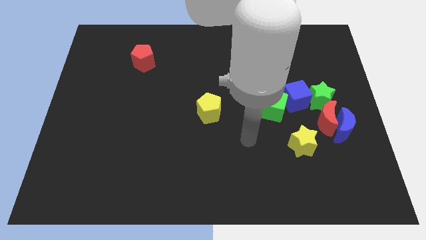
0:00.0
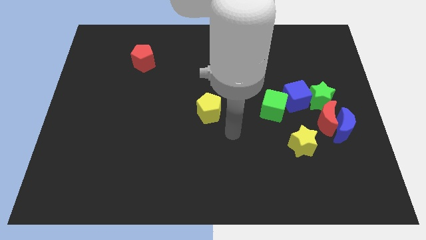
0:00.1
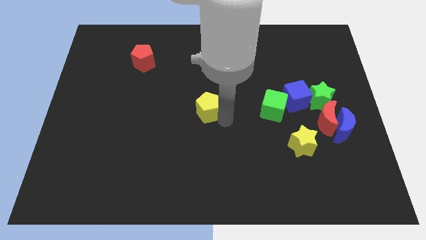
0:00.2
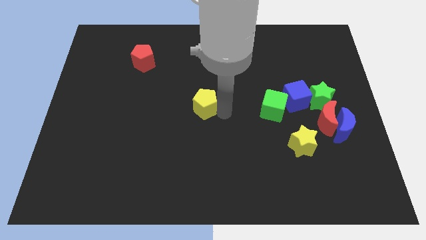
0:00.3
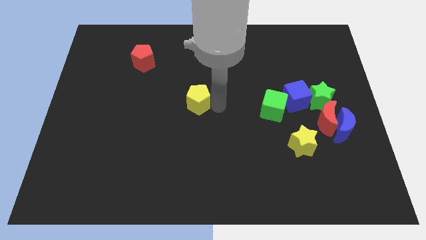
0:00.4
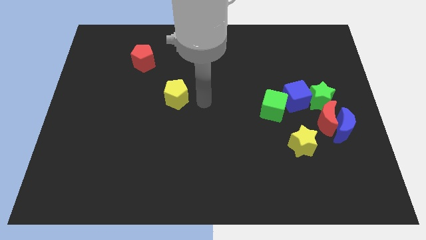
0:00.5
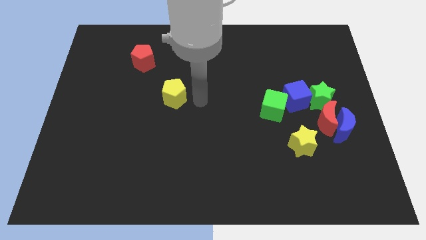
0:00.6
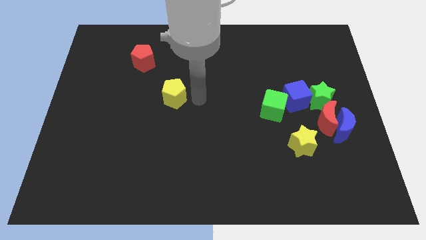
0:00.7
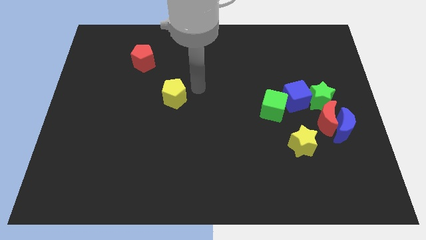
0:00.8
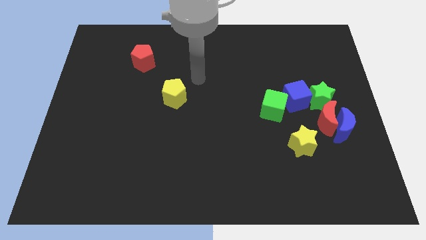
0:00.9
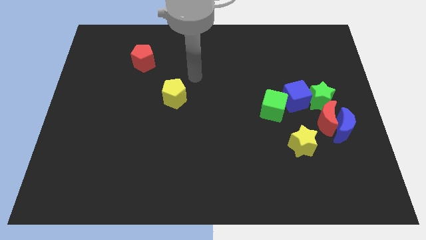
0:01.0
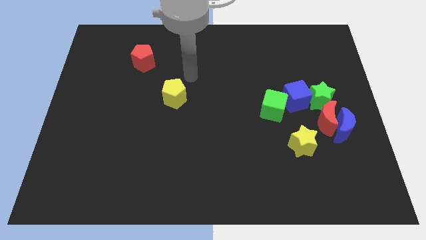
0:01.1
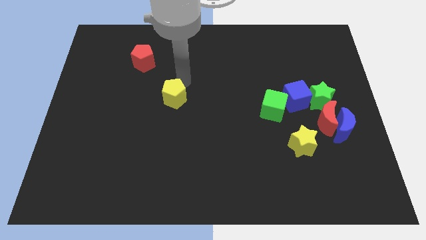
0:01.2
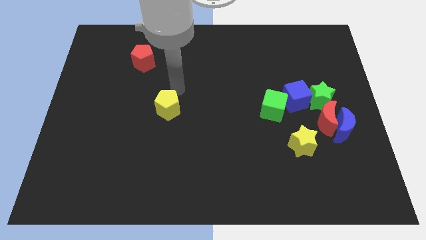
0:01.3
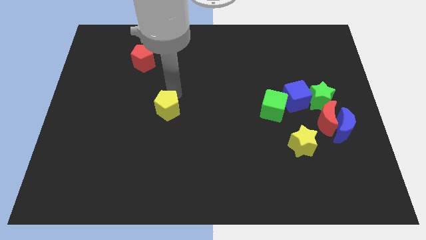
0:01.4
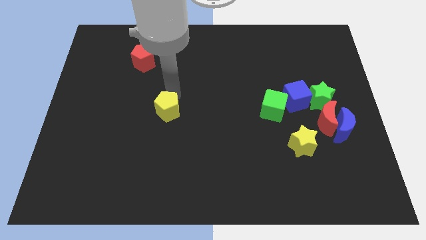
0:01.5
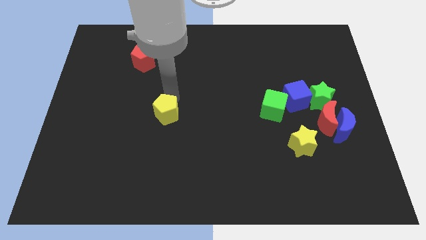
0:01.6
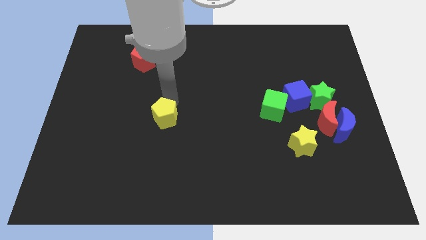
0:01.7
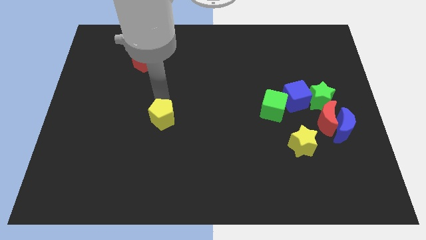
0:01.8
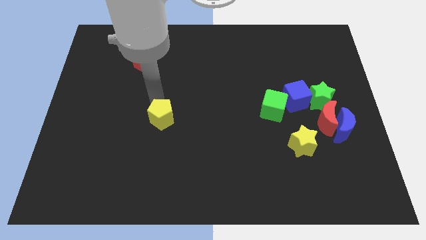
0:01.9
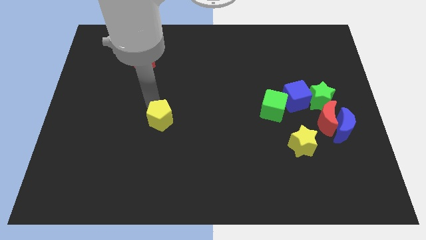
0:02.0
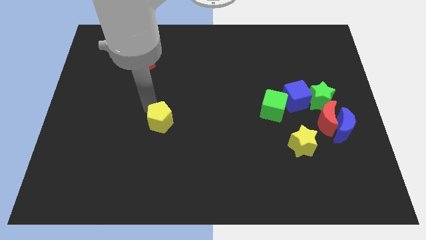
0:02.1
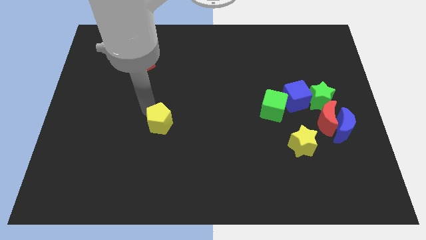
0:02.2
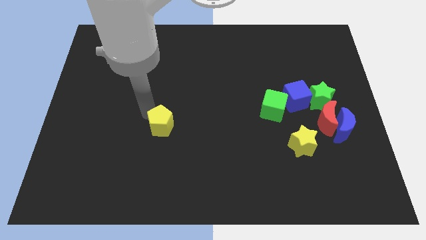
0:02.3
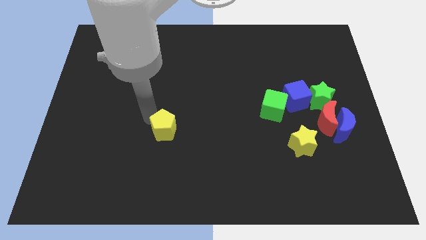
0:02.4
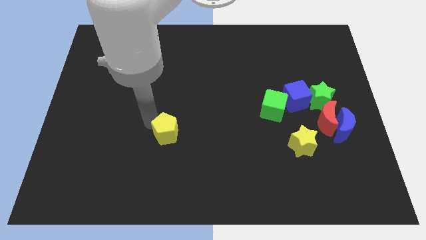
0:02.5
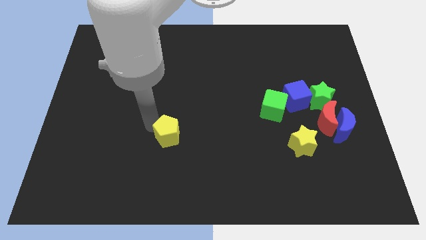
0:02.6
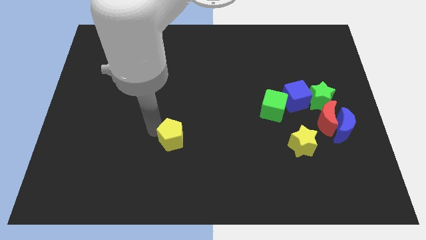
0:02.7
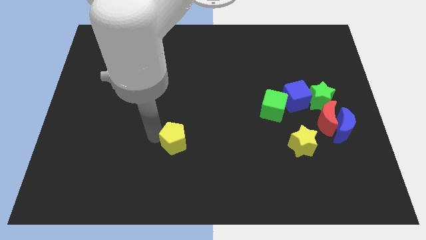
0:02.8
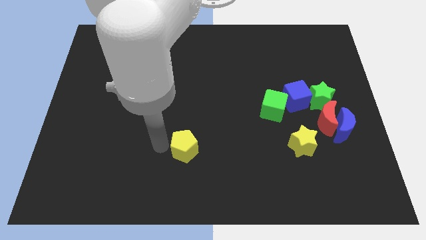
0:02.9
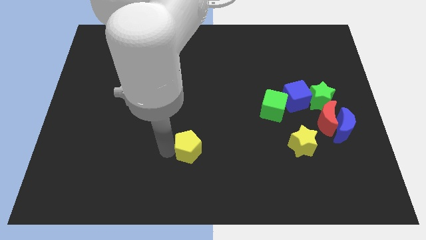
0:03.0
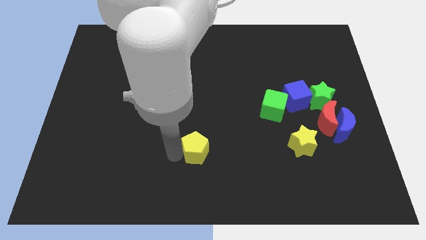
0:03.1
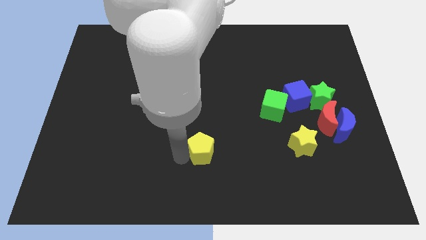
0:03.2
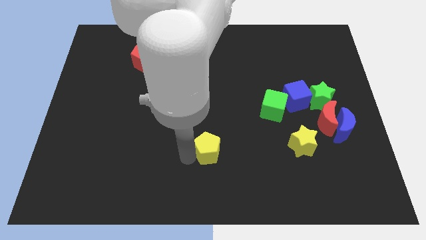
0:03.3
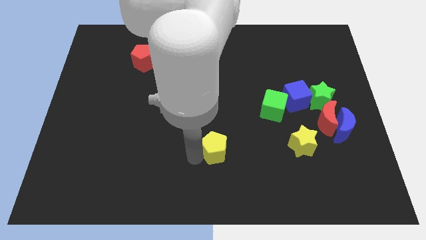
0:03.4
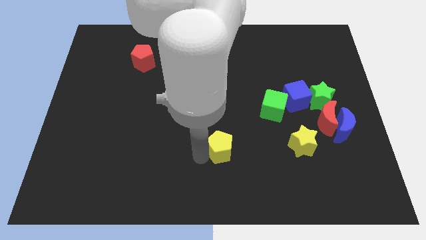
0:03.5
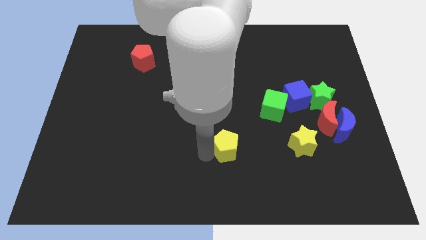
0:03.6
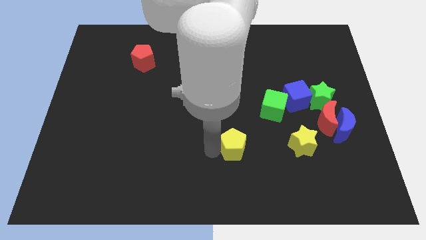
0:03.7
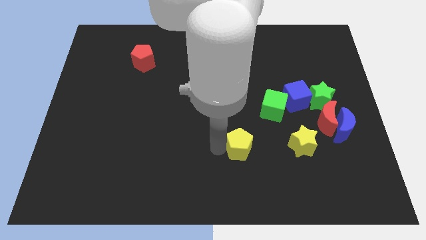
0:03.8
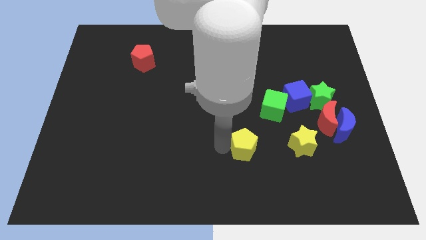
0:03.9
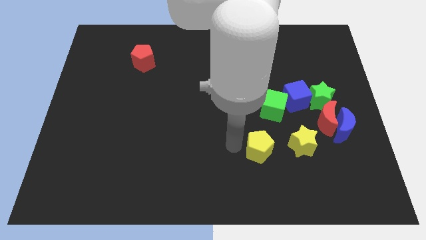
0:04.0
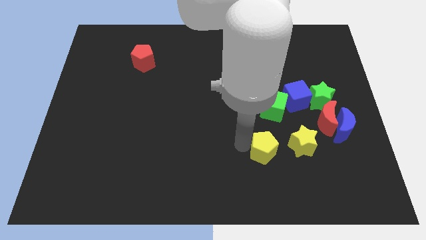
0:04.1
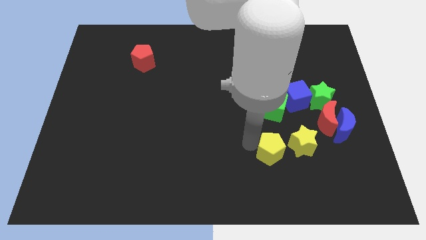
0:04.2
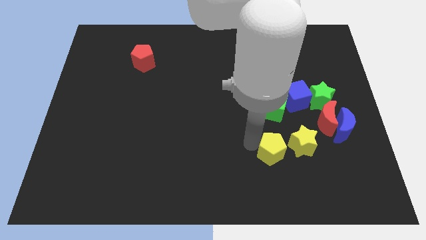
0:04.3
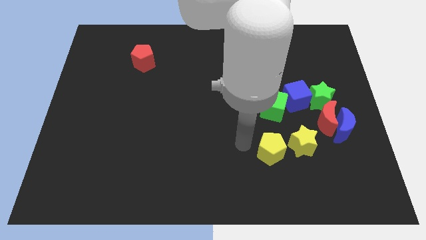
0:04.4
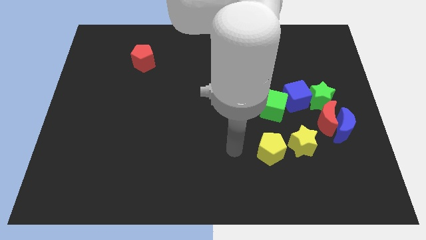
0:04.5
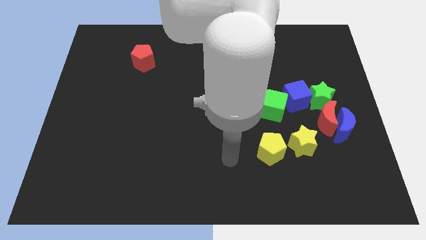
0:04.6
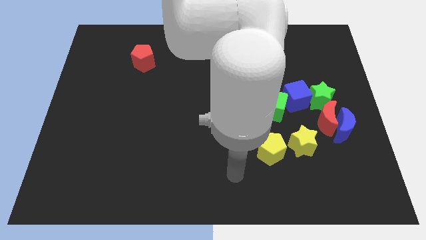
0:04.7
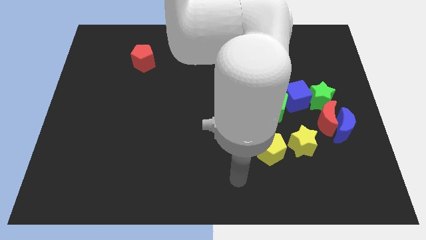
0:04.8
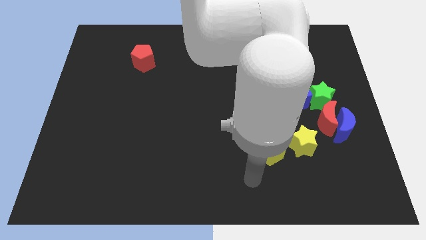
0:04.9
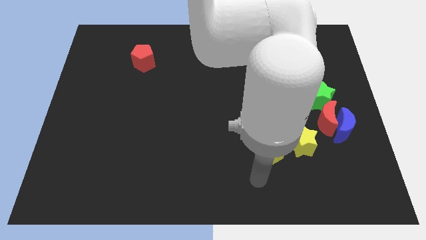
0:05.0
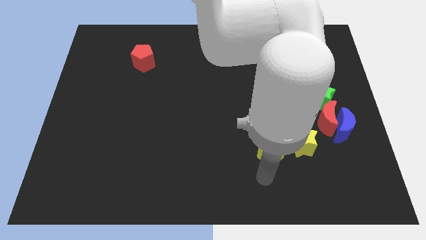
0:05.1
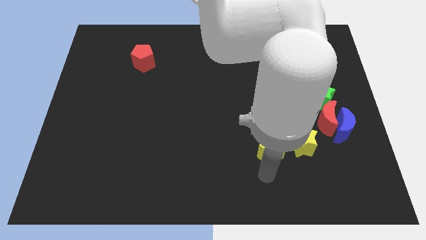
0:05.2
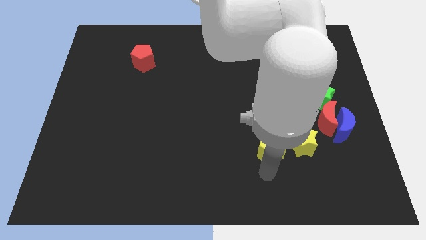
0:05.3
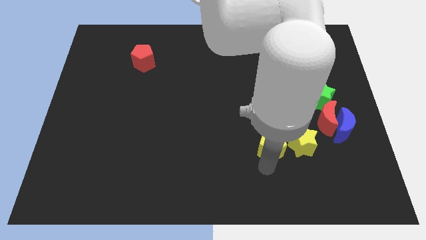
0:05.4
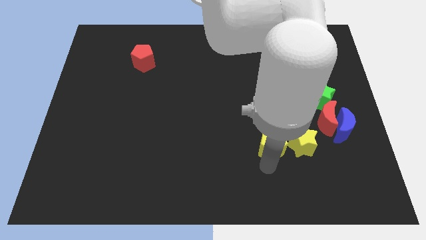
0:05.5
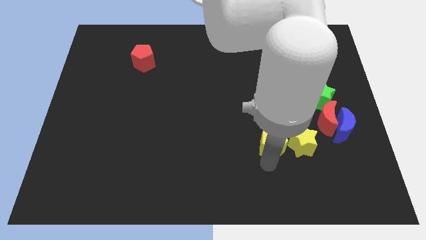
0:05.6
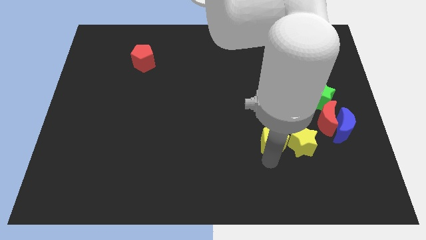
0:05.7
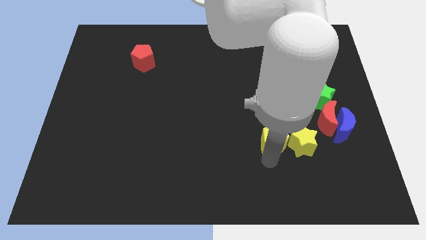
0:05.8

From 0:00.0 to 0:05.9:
place the yellow pentagon below the green cube

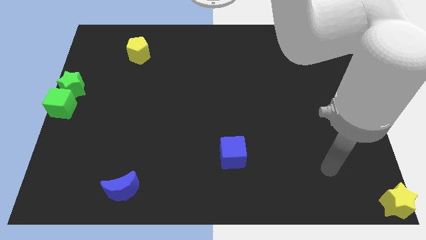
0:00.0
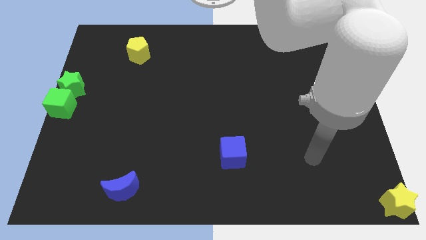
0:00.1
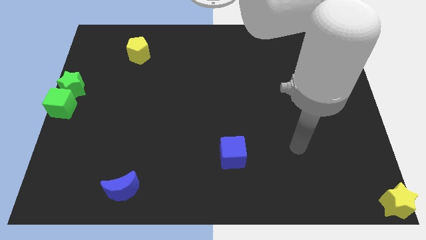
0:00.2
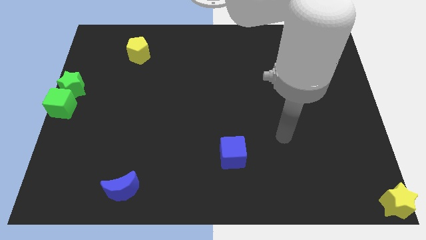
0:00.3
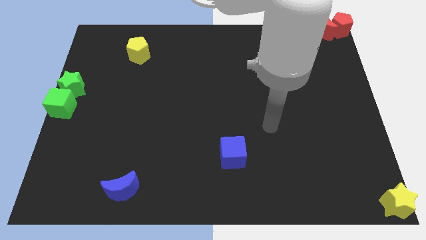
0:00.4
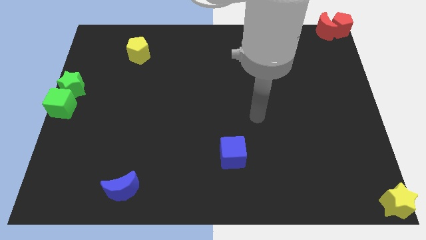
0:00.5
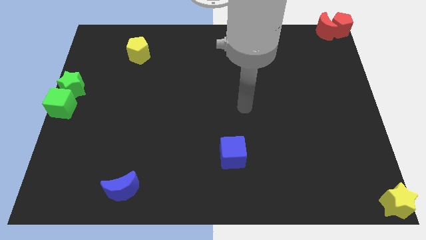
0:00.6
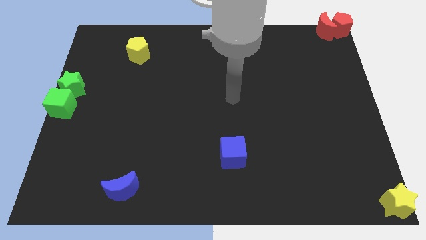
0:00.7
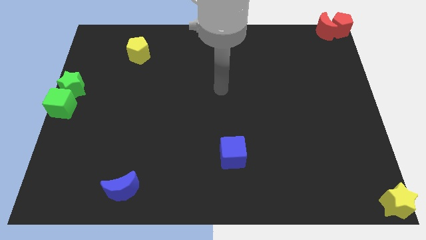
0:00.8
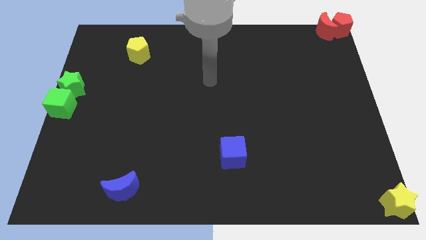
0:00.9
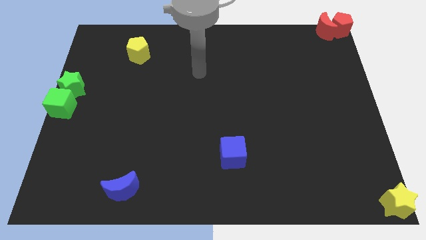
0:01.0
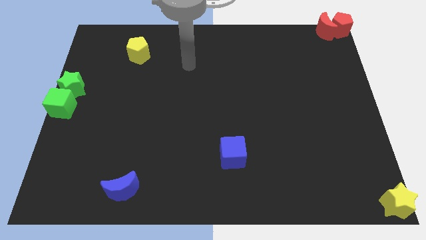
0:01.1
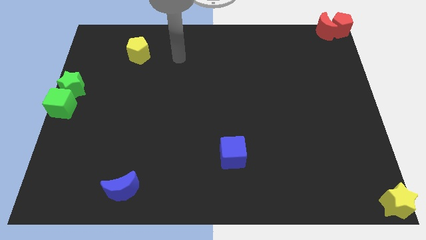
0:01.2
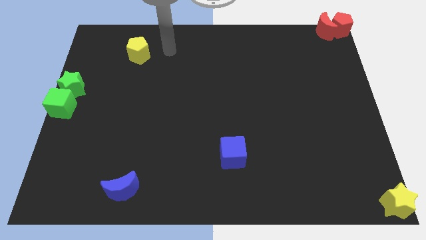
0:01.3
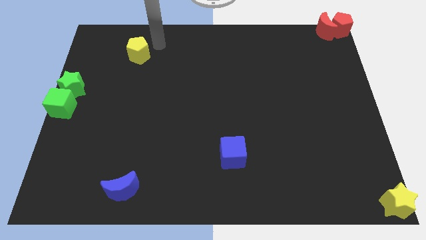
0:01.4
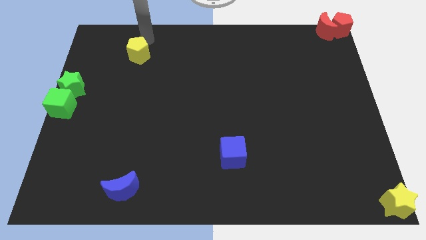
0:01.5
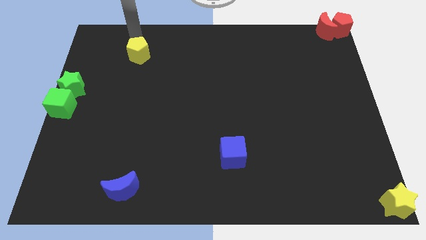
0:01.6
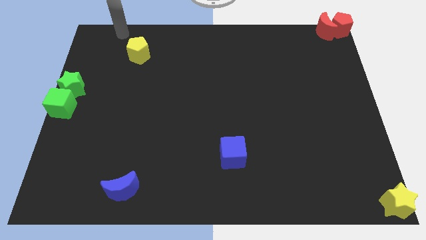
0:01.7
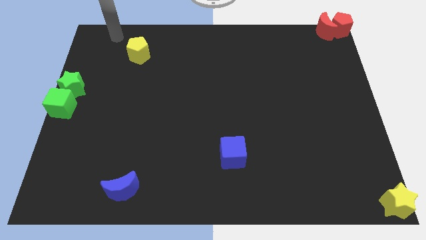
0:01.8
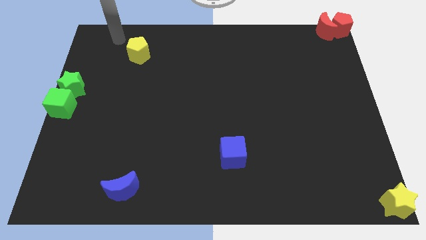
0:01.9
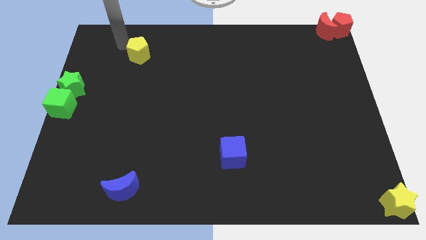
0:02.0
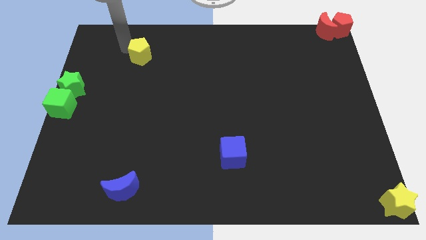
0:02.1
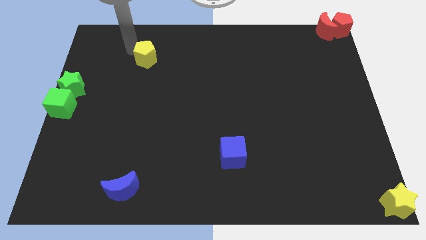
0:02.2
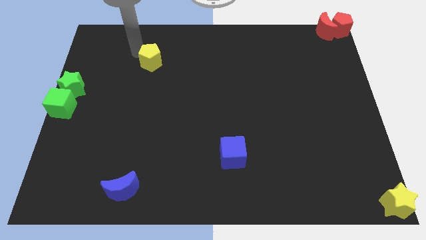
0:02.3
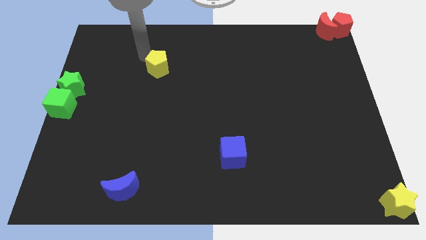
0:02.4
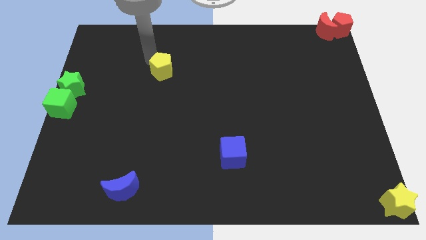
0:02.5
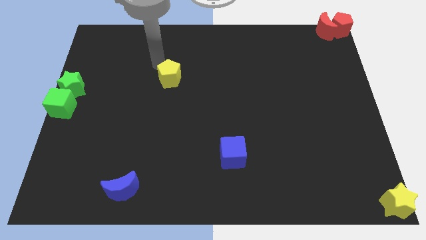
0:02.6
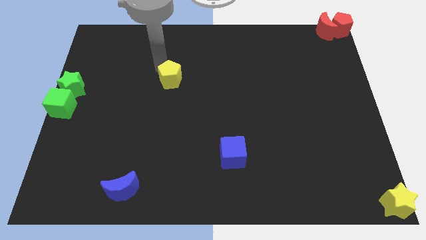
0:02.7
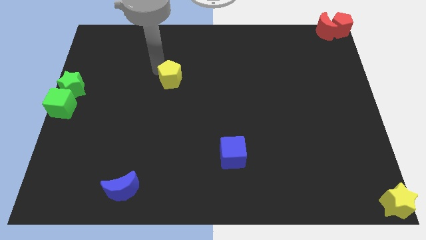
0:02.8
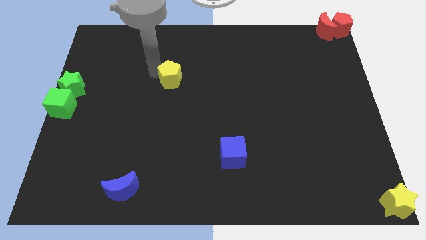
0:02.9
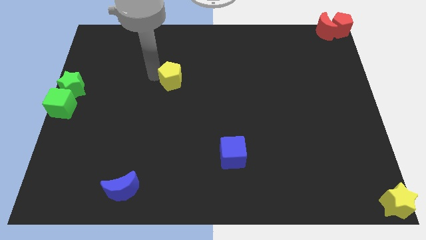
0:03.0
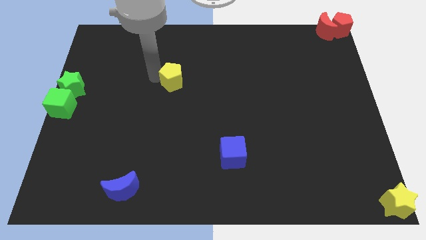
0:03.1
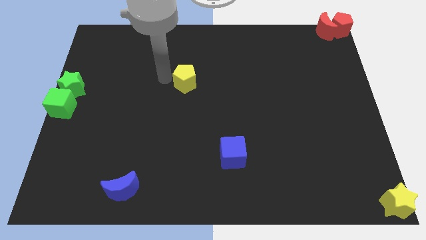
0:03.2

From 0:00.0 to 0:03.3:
move yellow pentagon towards the center of the board
